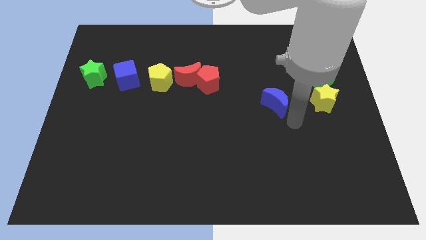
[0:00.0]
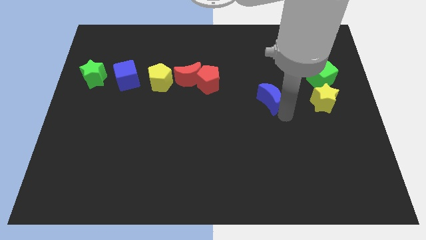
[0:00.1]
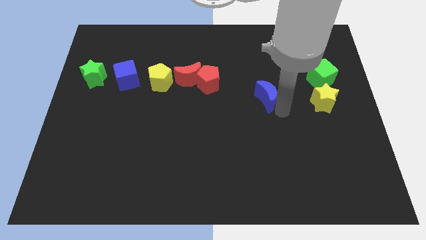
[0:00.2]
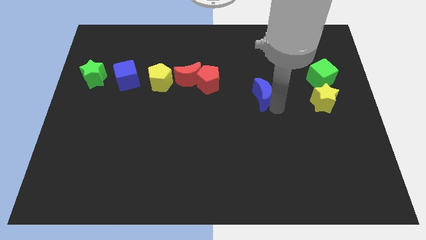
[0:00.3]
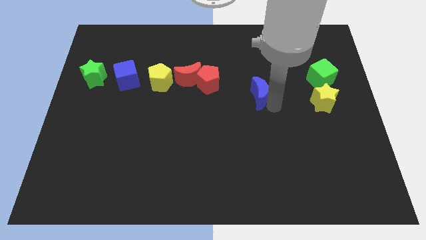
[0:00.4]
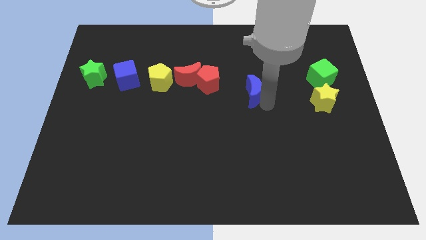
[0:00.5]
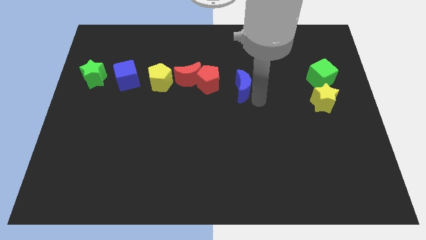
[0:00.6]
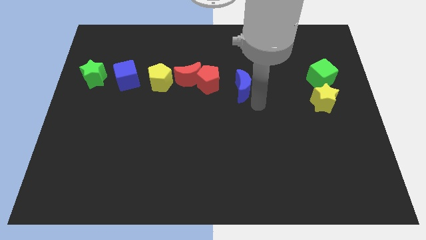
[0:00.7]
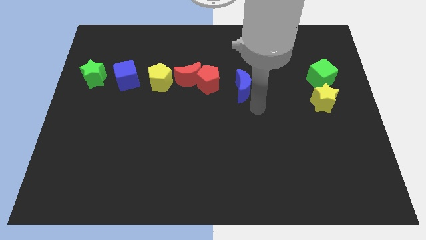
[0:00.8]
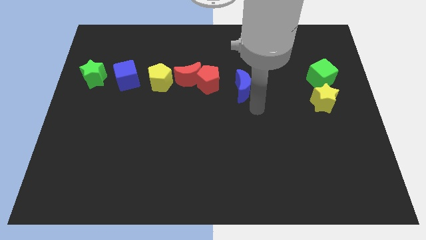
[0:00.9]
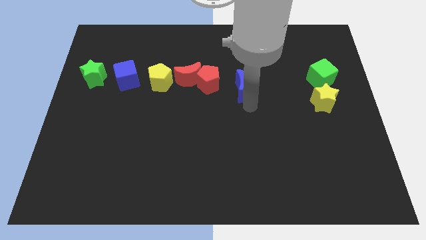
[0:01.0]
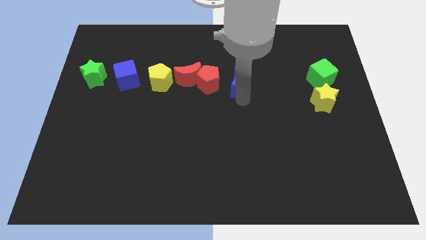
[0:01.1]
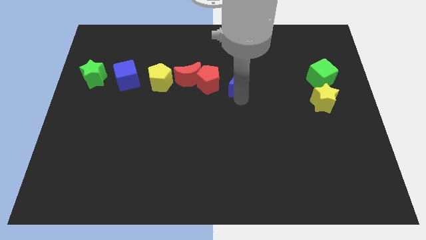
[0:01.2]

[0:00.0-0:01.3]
move blue moon right beside the red pentagon

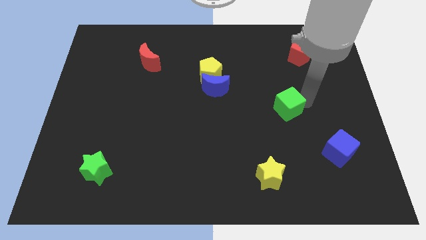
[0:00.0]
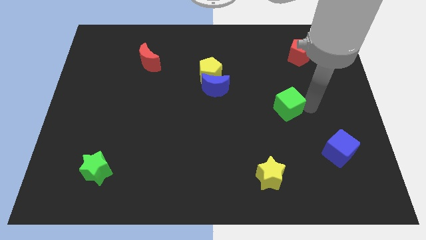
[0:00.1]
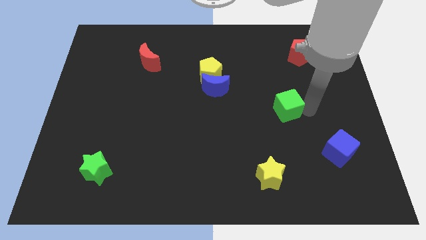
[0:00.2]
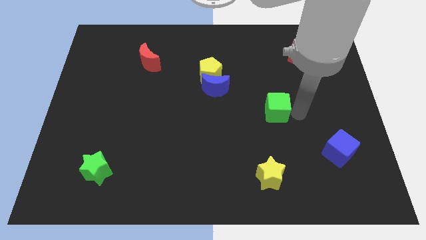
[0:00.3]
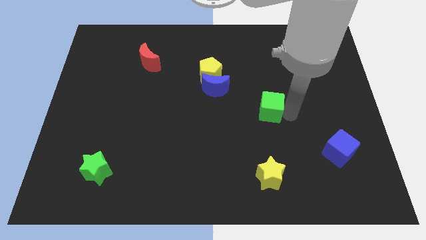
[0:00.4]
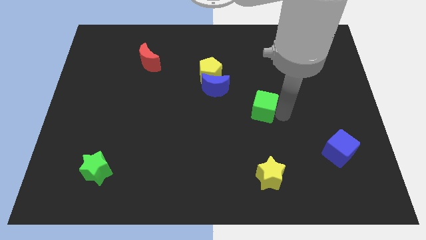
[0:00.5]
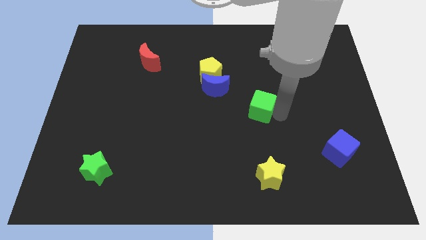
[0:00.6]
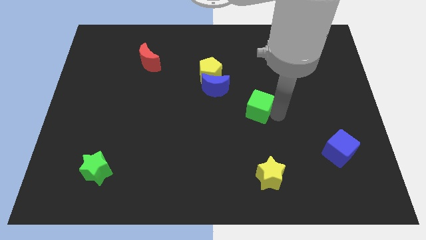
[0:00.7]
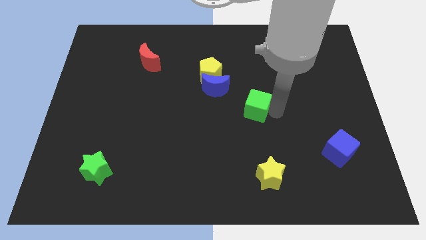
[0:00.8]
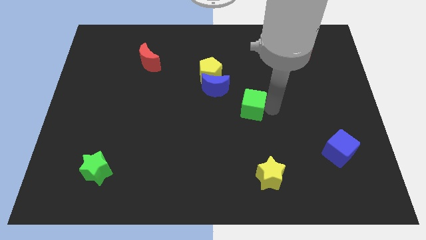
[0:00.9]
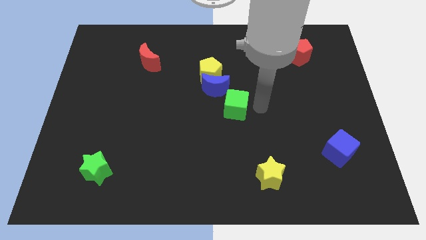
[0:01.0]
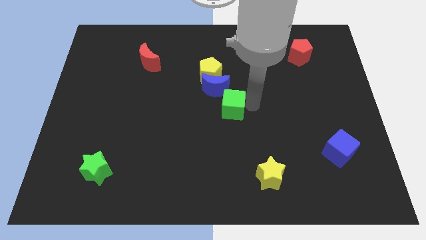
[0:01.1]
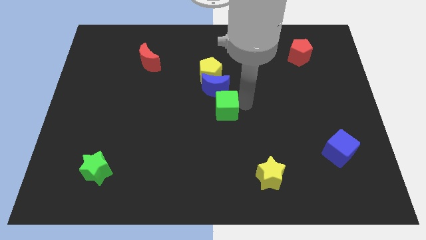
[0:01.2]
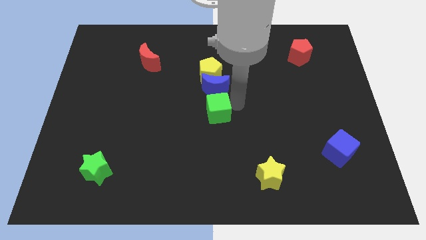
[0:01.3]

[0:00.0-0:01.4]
move green cube to the bottom of the blue crescent

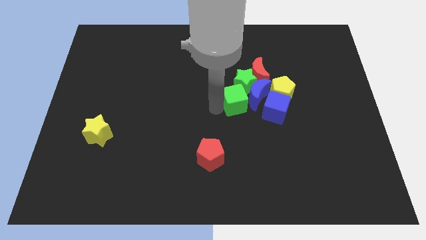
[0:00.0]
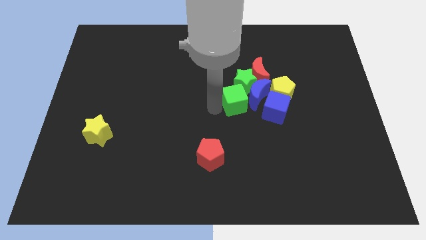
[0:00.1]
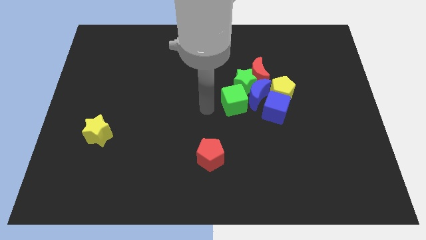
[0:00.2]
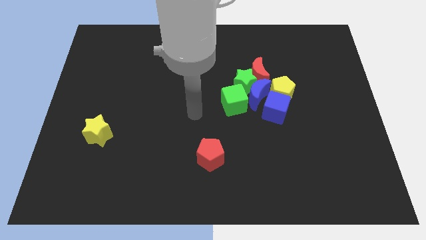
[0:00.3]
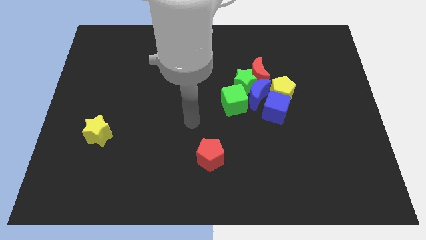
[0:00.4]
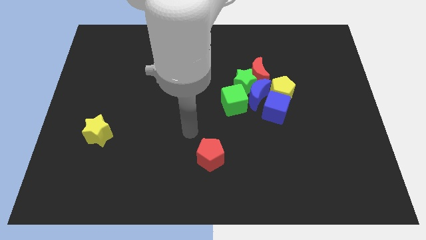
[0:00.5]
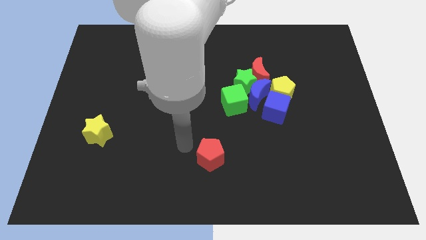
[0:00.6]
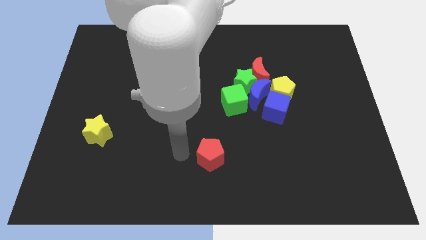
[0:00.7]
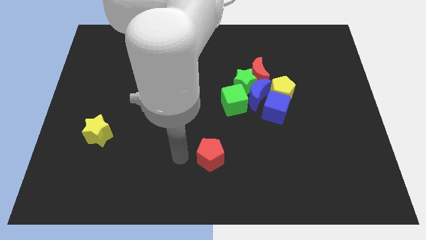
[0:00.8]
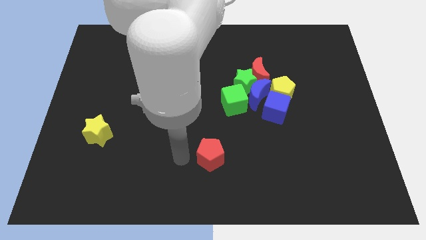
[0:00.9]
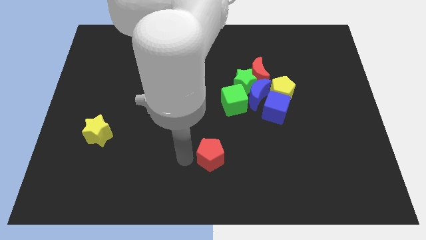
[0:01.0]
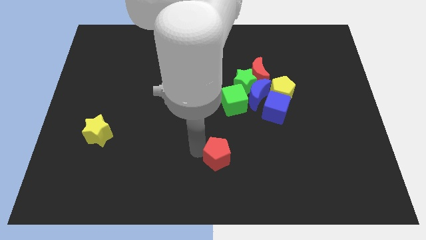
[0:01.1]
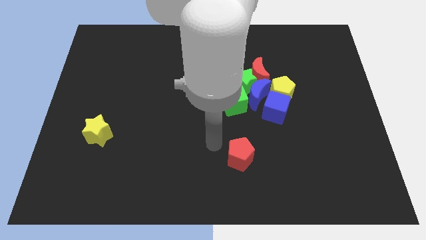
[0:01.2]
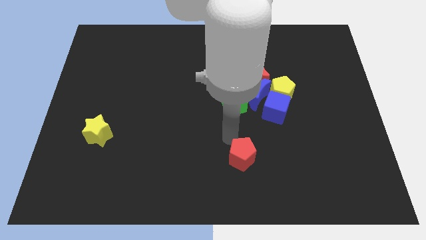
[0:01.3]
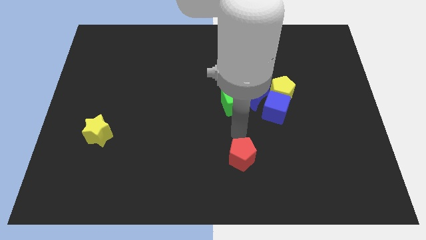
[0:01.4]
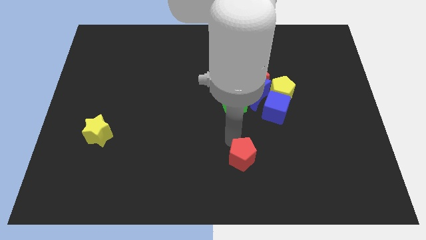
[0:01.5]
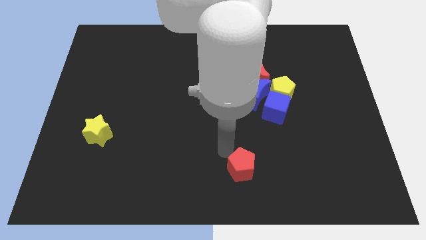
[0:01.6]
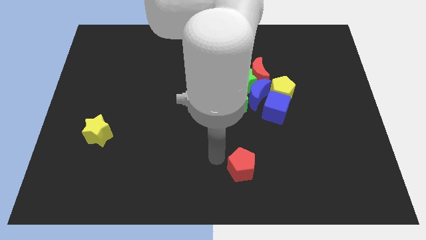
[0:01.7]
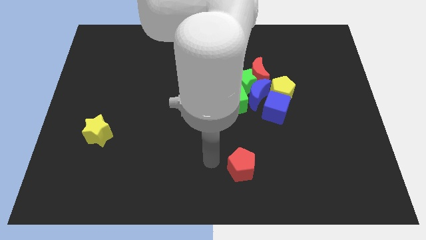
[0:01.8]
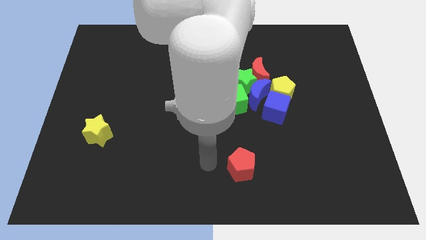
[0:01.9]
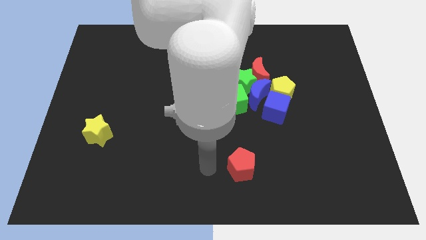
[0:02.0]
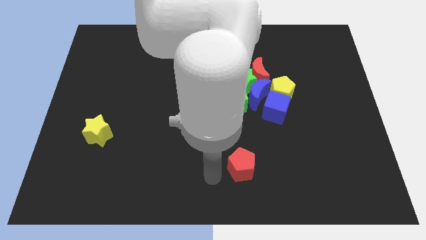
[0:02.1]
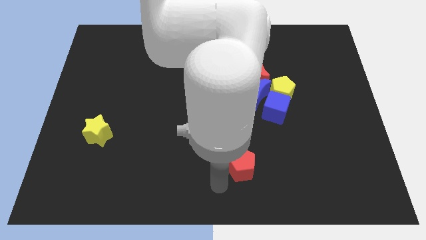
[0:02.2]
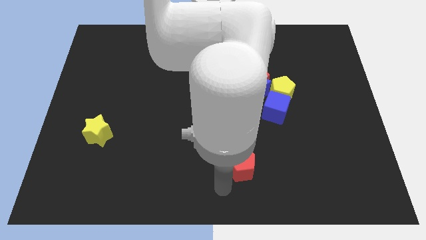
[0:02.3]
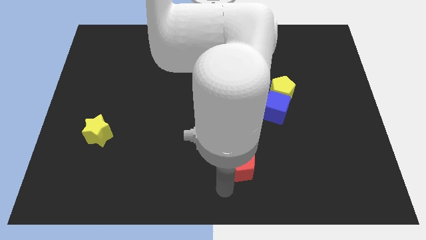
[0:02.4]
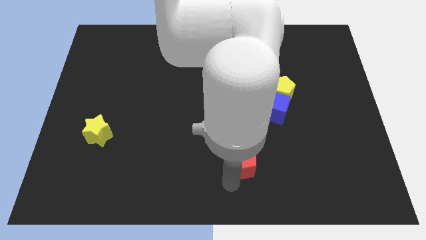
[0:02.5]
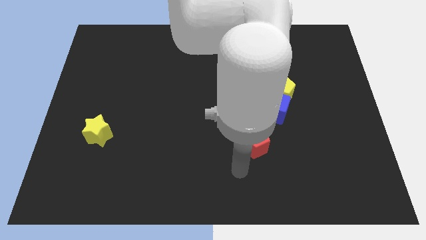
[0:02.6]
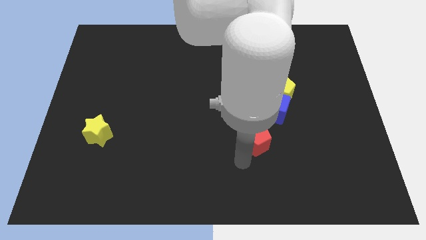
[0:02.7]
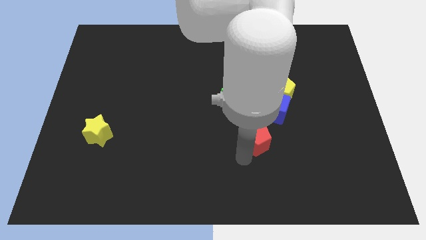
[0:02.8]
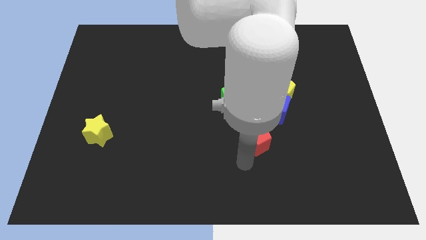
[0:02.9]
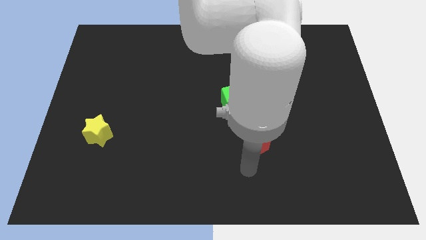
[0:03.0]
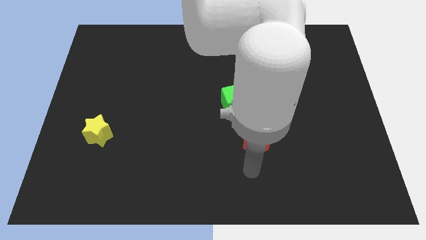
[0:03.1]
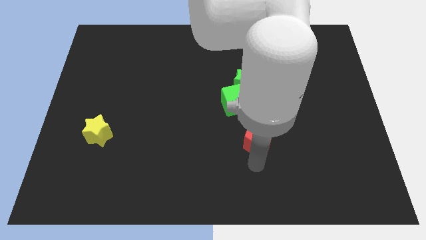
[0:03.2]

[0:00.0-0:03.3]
place the red pentagon below the blue cube

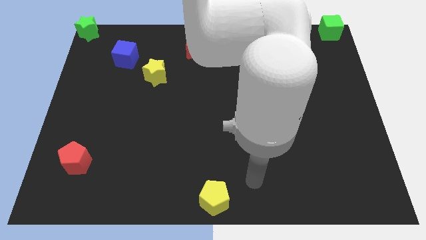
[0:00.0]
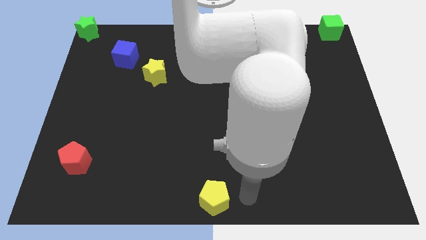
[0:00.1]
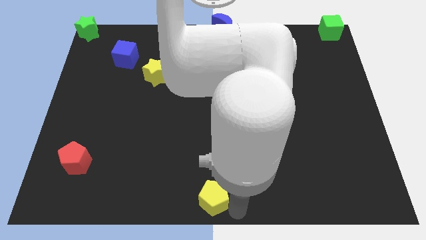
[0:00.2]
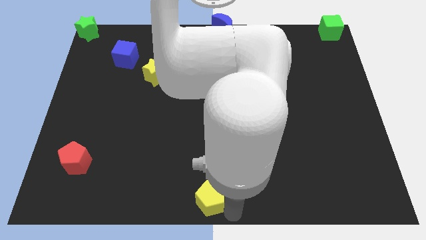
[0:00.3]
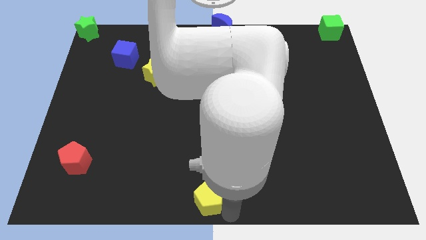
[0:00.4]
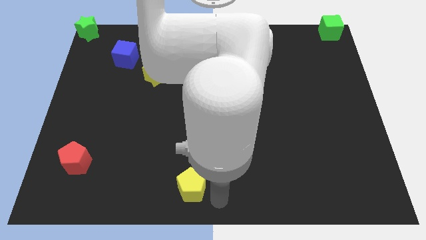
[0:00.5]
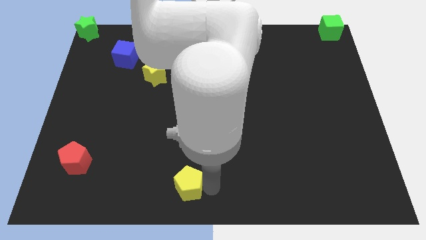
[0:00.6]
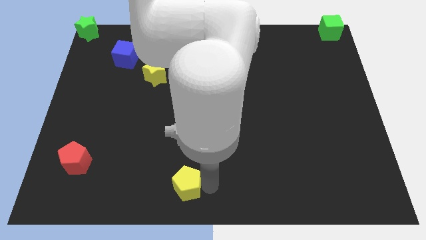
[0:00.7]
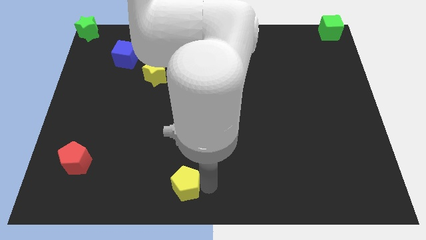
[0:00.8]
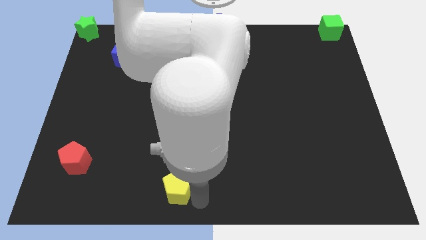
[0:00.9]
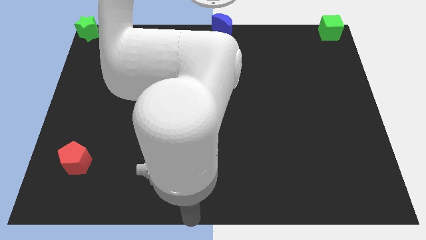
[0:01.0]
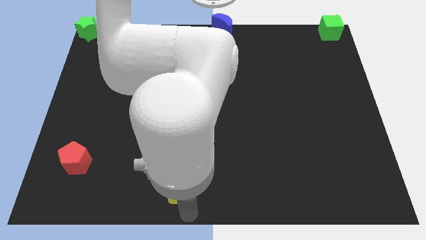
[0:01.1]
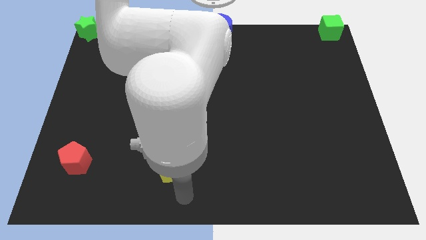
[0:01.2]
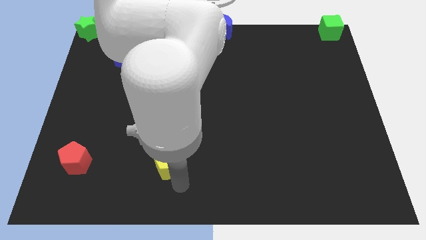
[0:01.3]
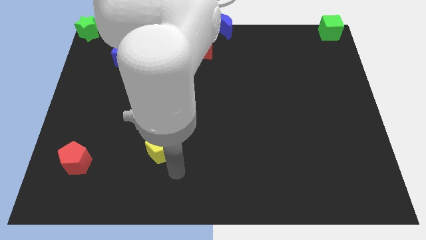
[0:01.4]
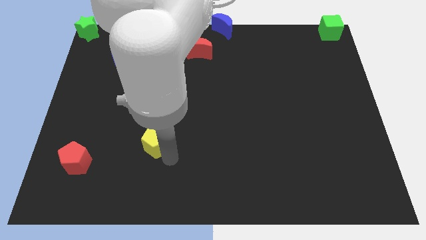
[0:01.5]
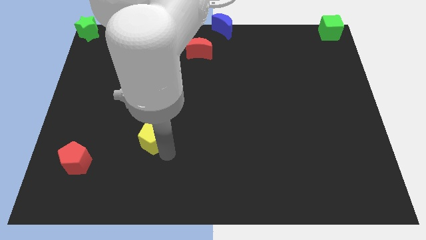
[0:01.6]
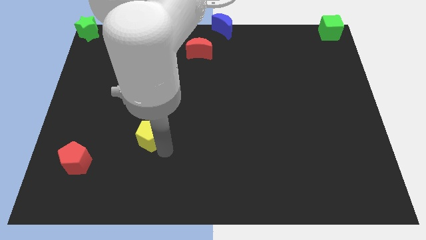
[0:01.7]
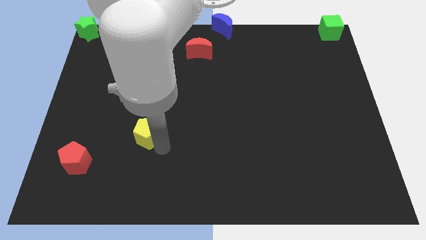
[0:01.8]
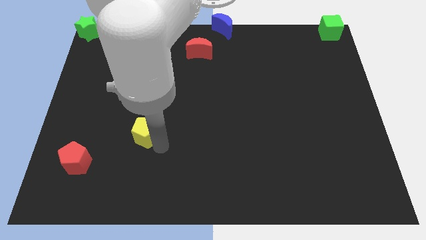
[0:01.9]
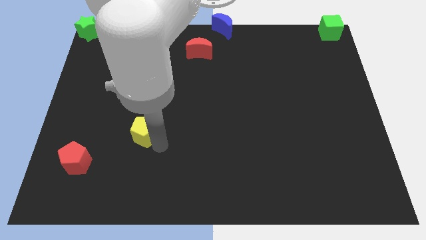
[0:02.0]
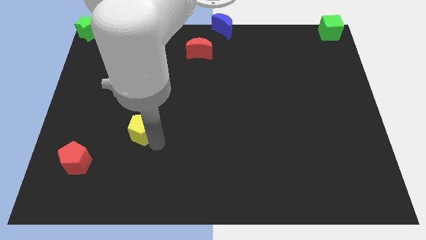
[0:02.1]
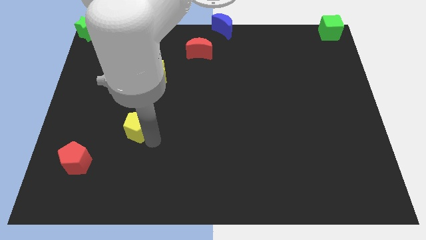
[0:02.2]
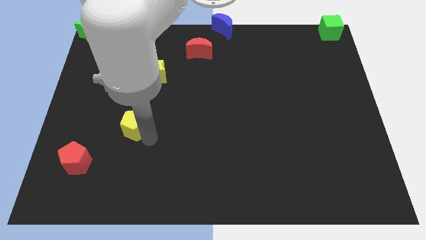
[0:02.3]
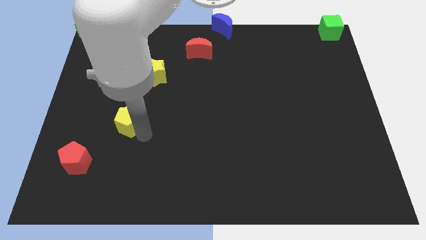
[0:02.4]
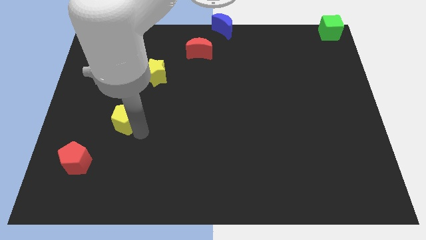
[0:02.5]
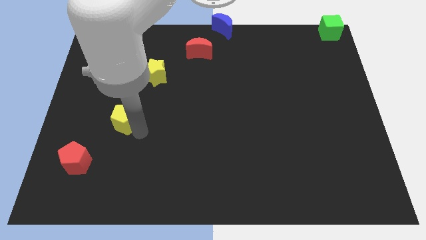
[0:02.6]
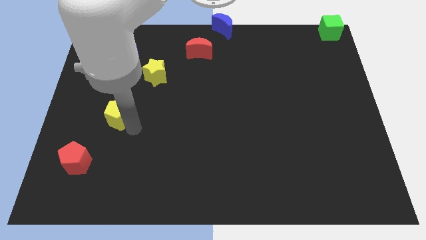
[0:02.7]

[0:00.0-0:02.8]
move the yellow pentagon towards the center left
